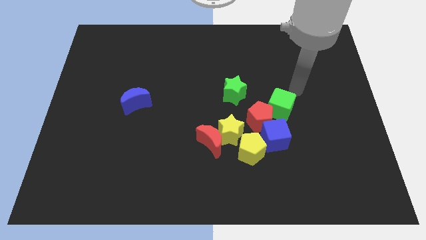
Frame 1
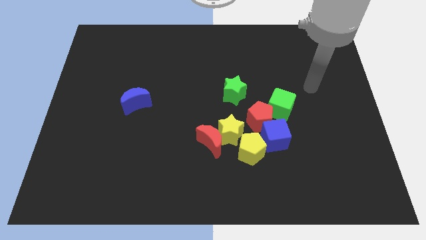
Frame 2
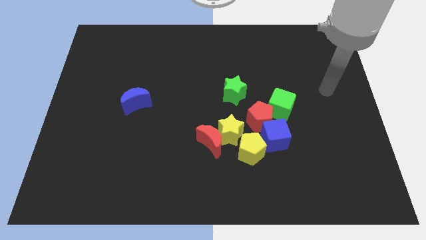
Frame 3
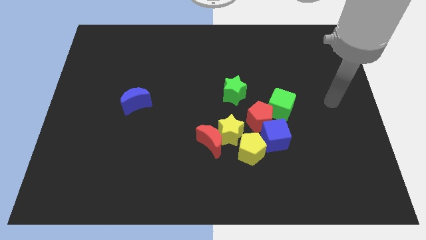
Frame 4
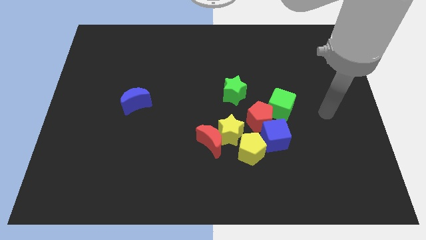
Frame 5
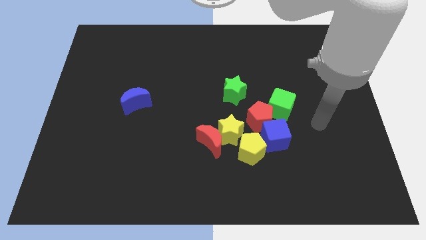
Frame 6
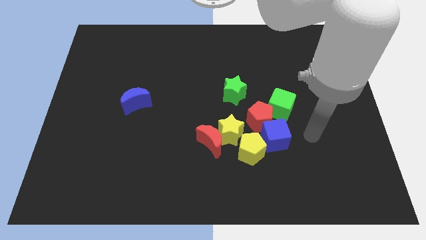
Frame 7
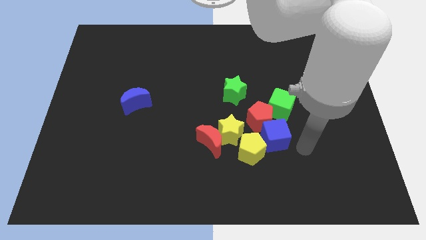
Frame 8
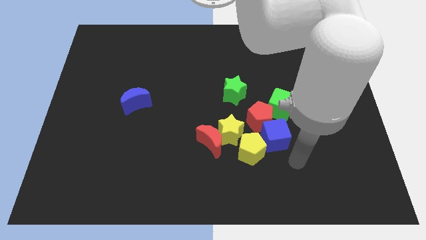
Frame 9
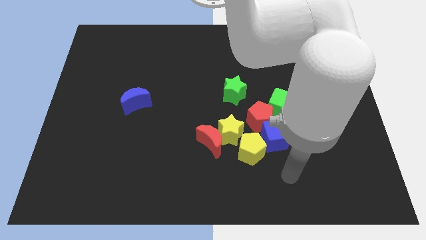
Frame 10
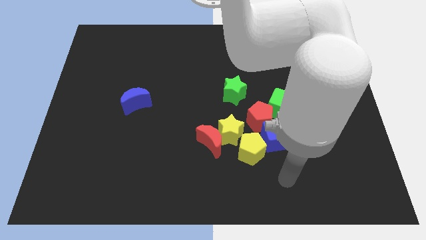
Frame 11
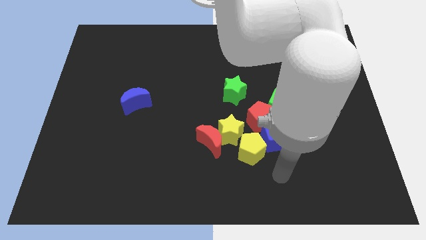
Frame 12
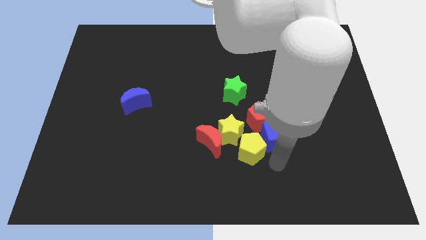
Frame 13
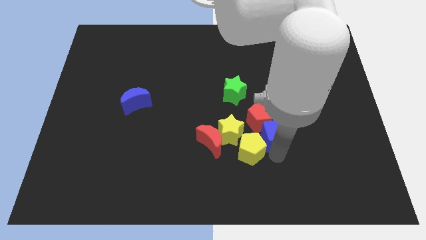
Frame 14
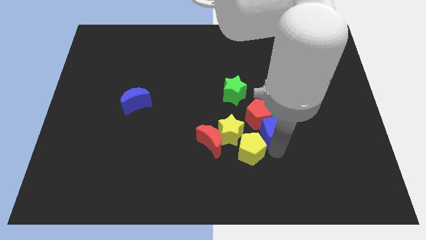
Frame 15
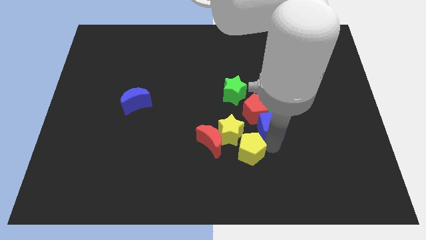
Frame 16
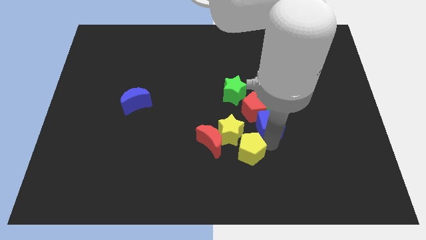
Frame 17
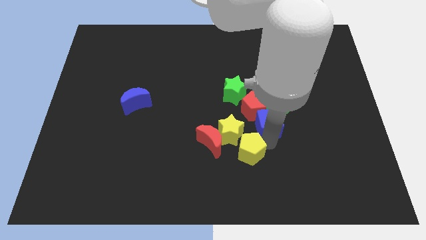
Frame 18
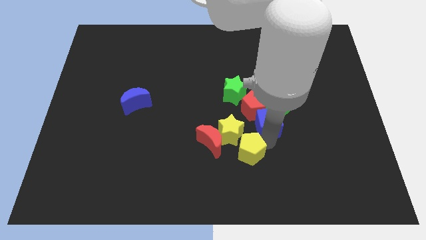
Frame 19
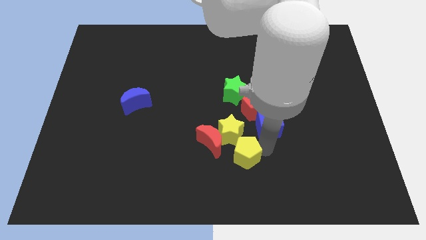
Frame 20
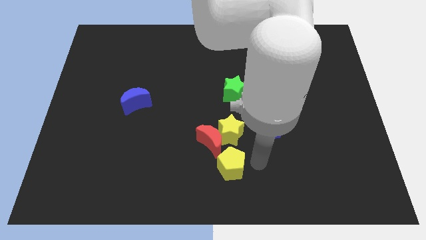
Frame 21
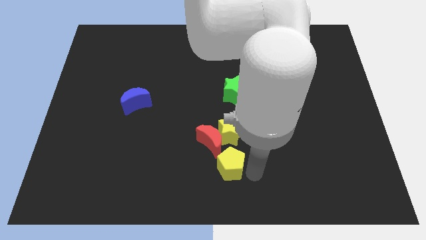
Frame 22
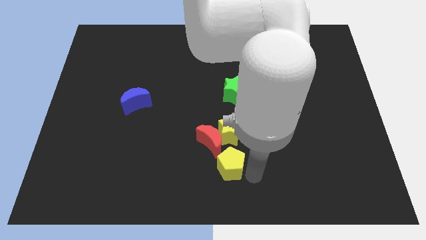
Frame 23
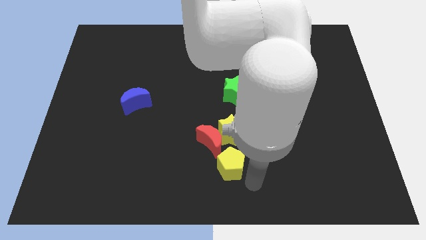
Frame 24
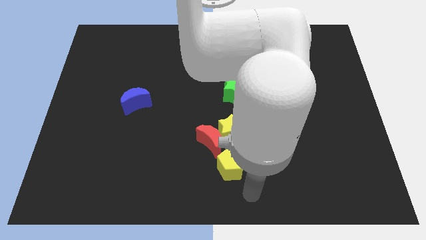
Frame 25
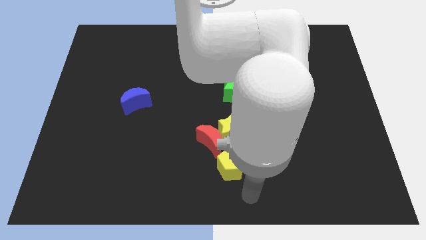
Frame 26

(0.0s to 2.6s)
place the red pentagon close to green star

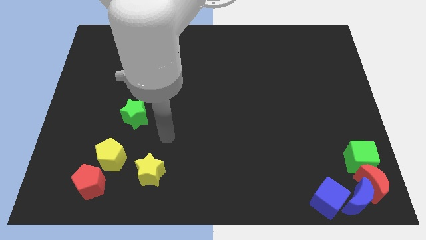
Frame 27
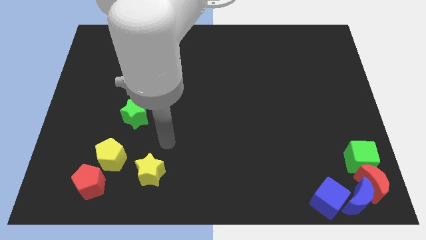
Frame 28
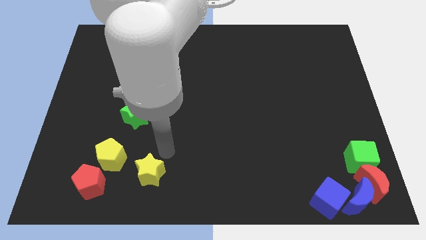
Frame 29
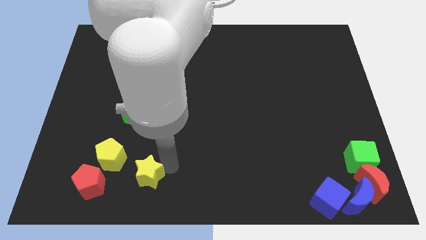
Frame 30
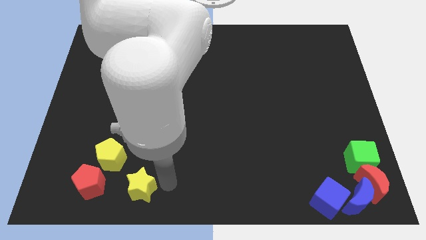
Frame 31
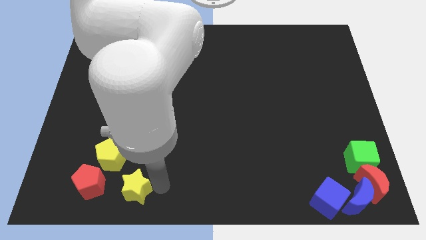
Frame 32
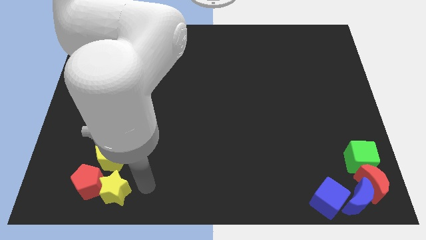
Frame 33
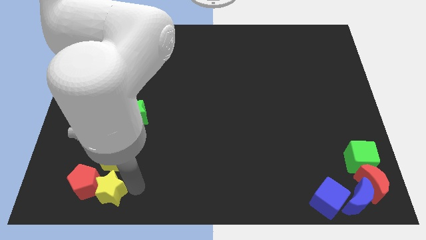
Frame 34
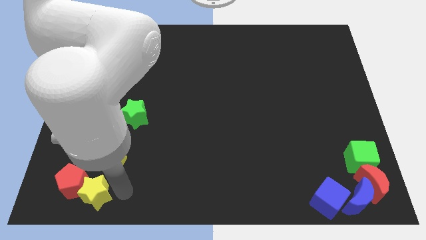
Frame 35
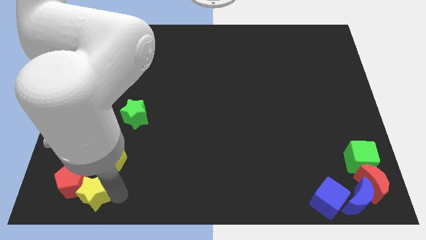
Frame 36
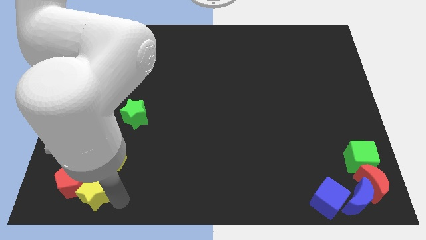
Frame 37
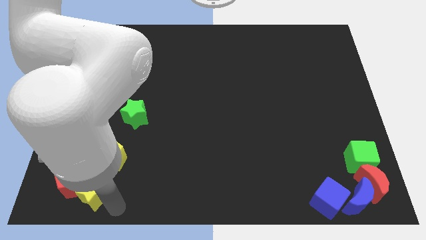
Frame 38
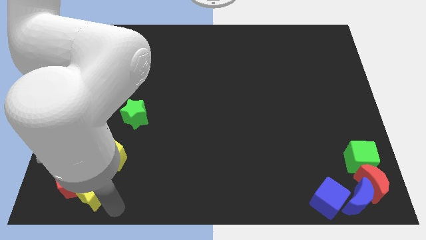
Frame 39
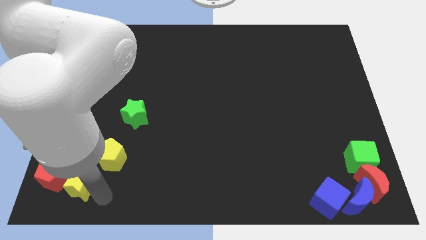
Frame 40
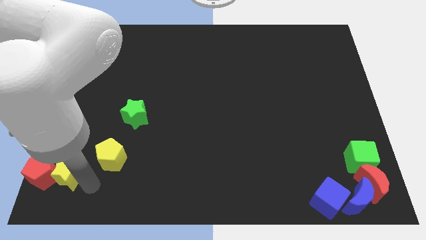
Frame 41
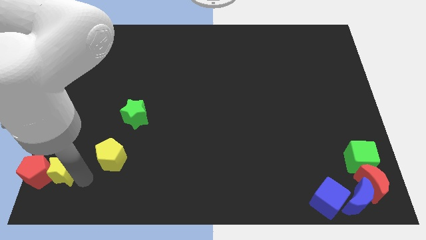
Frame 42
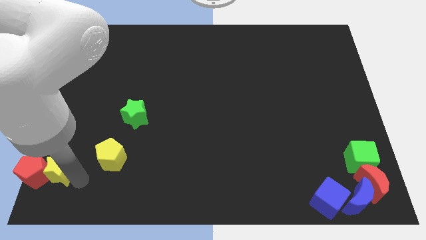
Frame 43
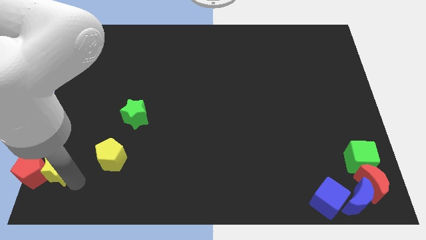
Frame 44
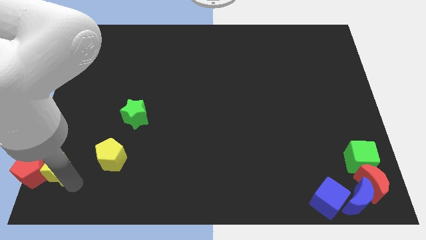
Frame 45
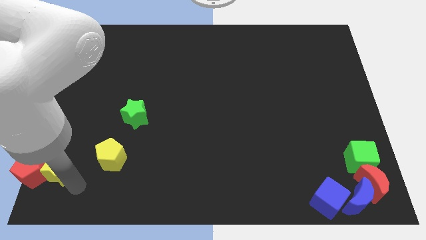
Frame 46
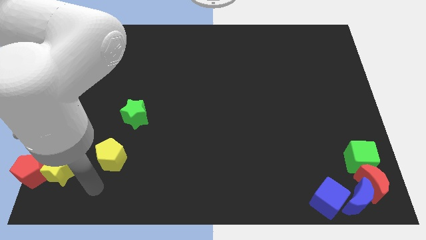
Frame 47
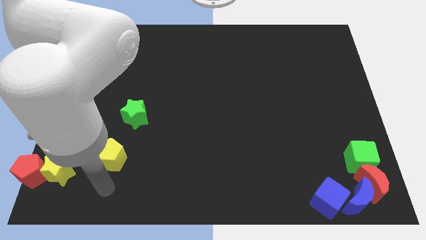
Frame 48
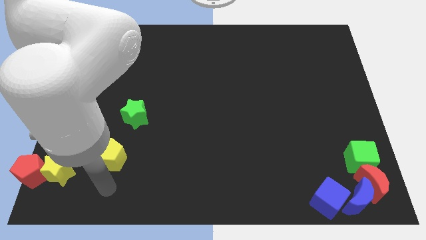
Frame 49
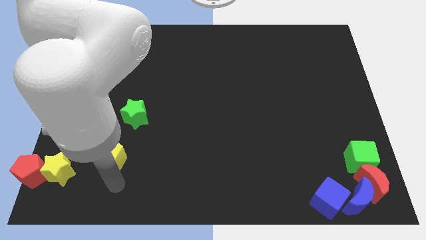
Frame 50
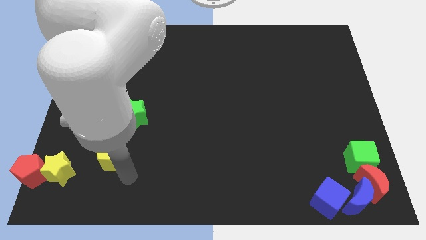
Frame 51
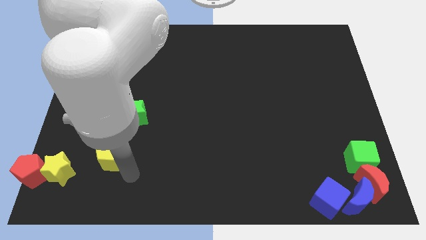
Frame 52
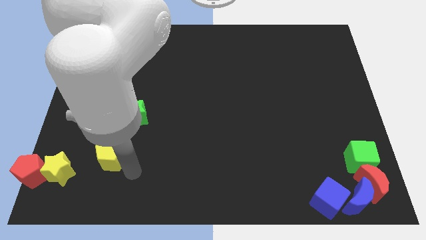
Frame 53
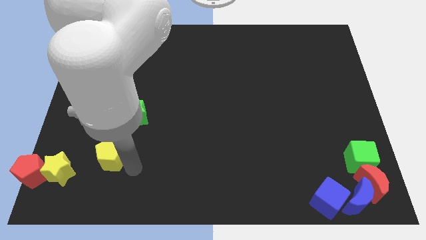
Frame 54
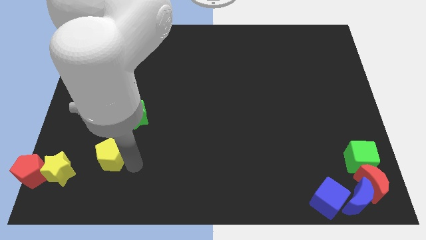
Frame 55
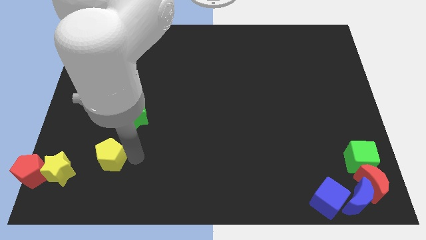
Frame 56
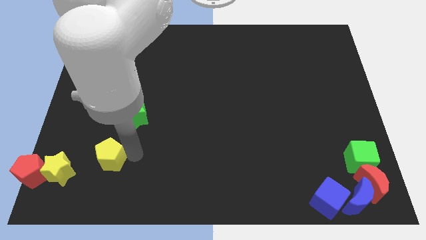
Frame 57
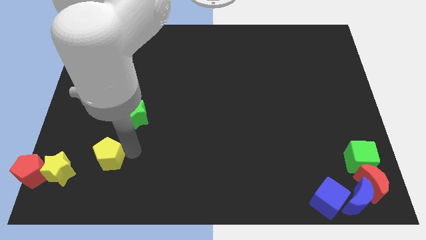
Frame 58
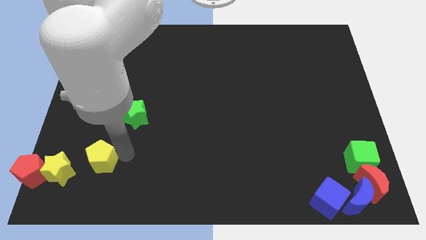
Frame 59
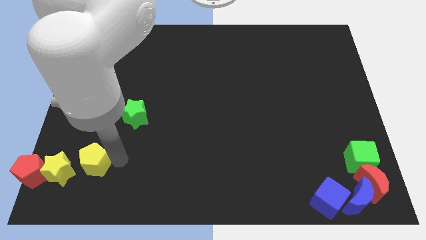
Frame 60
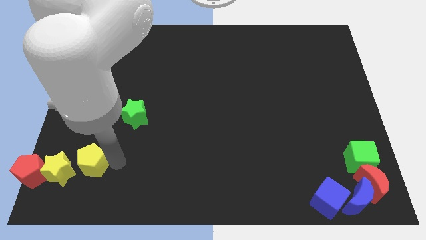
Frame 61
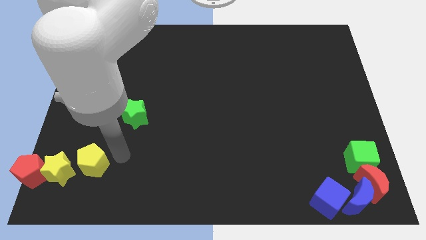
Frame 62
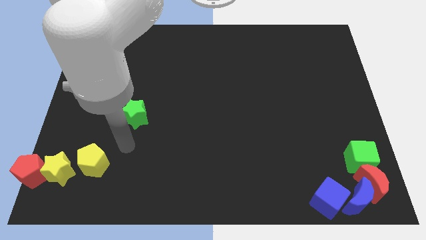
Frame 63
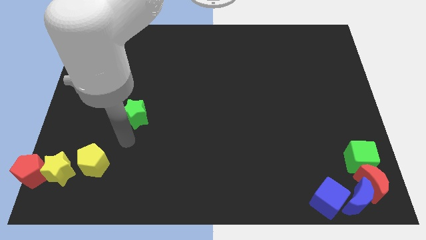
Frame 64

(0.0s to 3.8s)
move the yellow star to the bottom left of the board

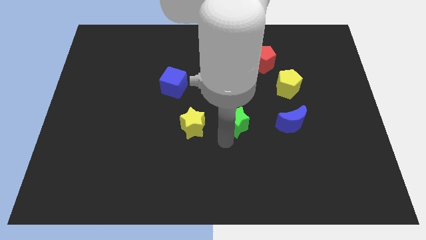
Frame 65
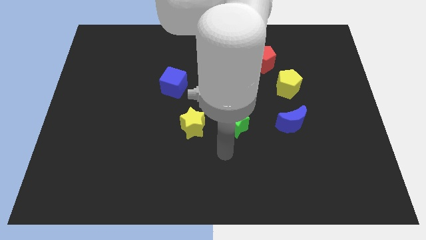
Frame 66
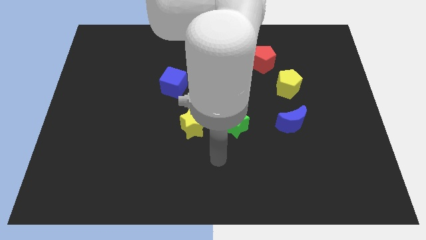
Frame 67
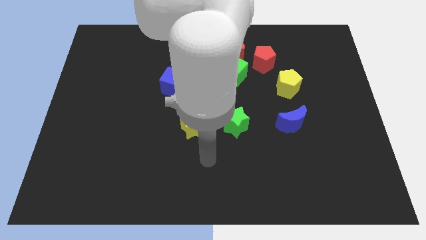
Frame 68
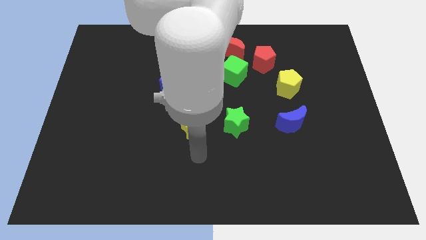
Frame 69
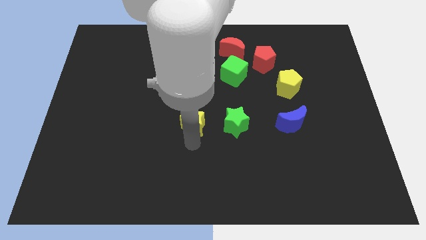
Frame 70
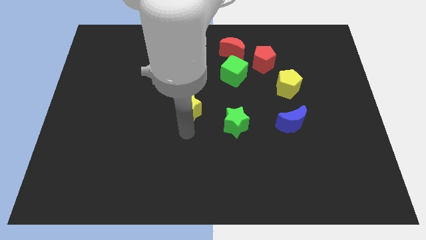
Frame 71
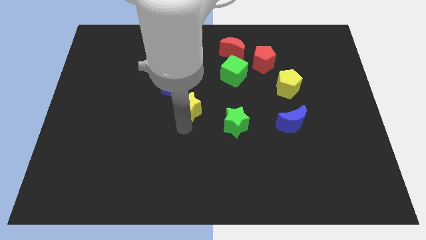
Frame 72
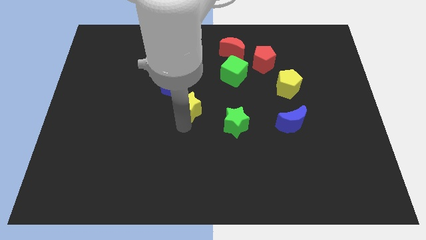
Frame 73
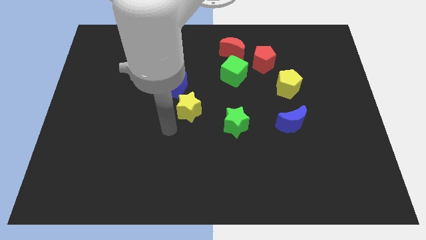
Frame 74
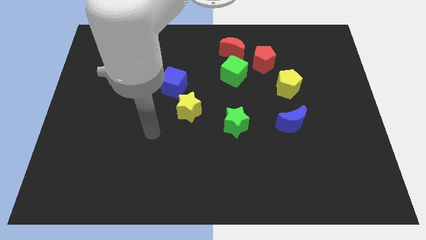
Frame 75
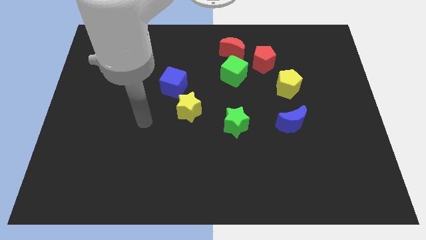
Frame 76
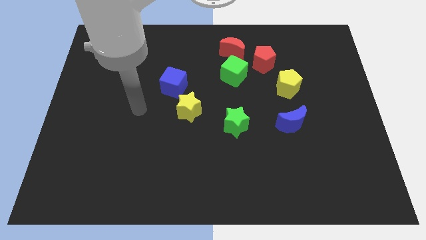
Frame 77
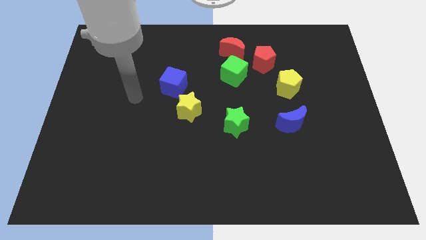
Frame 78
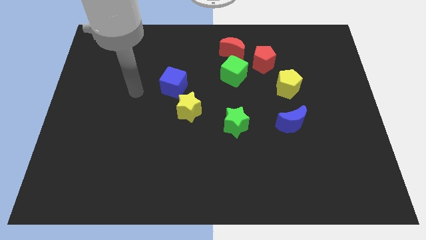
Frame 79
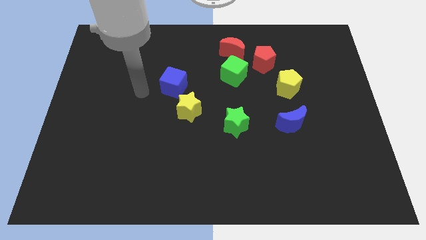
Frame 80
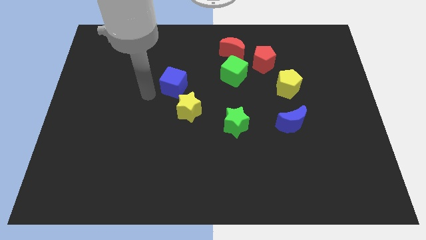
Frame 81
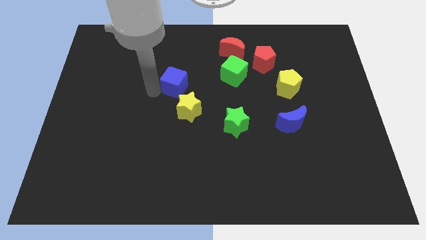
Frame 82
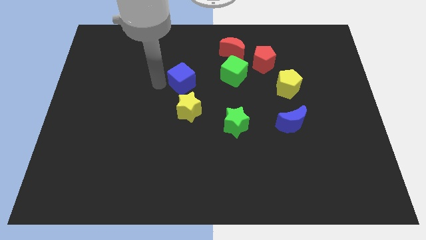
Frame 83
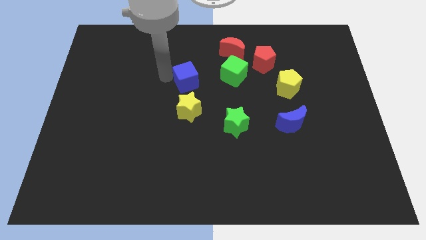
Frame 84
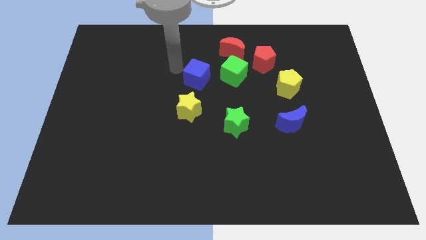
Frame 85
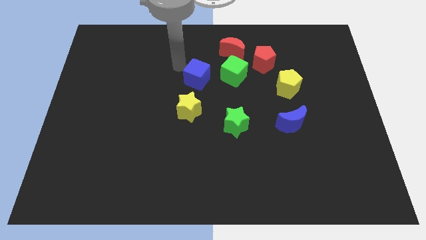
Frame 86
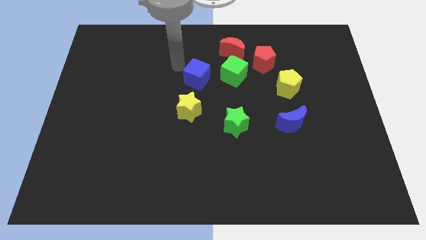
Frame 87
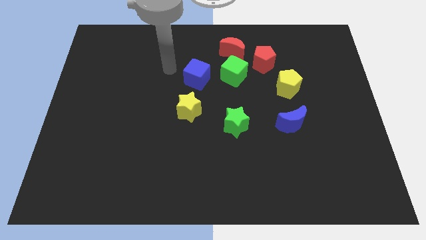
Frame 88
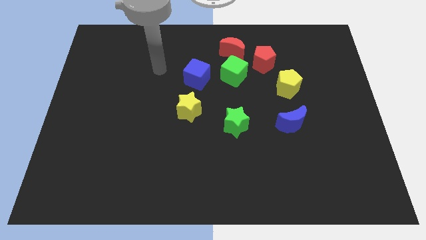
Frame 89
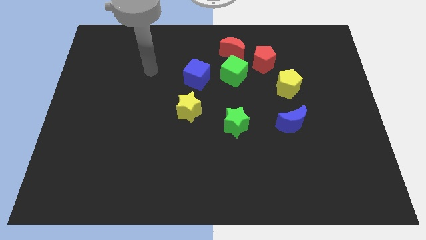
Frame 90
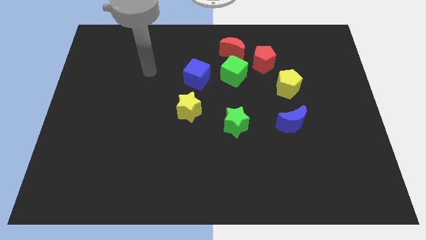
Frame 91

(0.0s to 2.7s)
arrange the yellow star and the blue cube to form a triangle with the green cube
